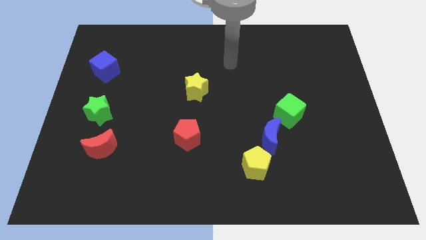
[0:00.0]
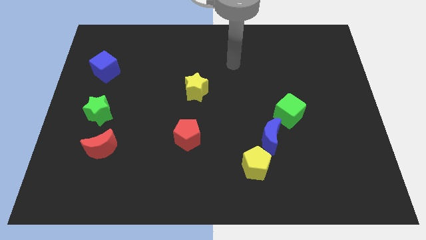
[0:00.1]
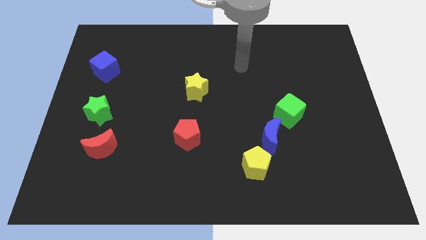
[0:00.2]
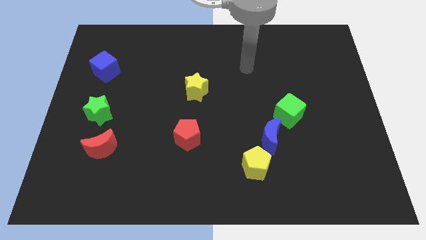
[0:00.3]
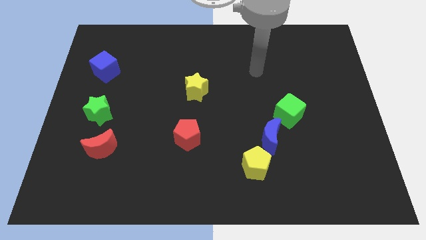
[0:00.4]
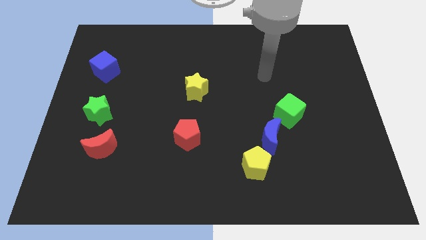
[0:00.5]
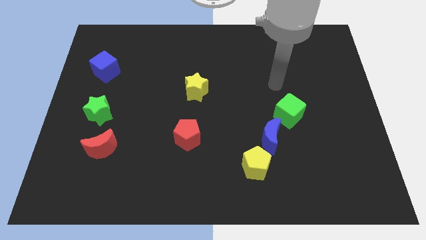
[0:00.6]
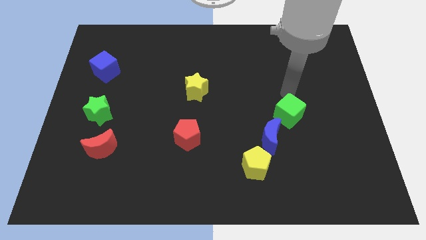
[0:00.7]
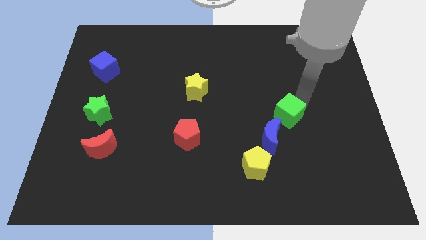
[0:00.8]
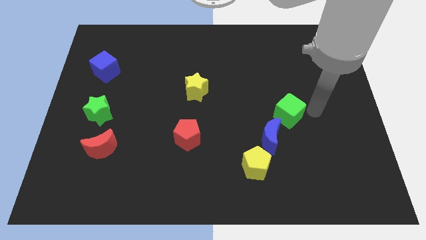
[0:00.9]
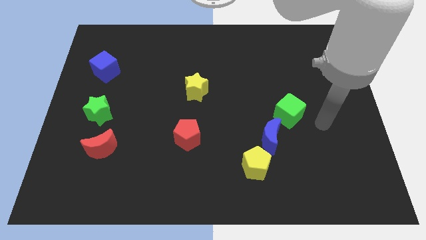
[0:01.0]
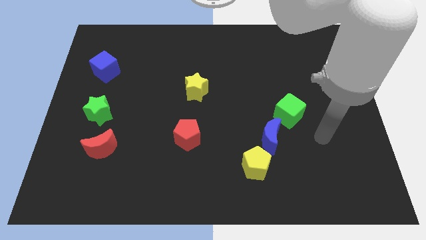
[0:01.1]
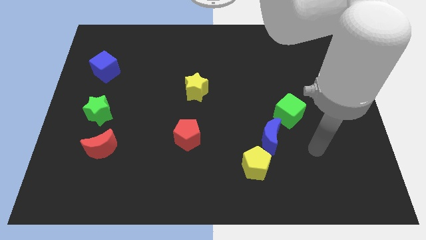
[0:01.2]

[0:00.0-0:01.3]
put your arm towards the left side of the board

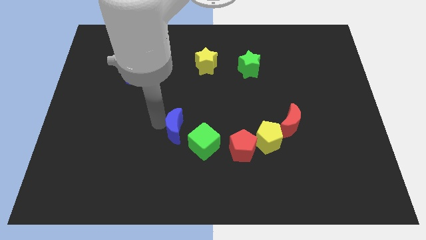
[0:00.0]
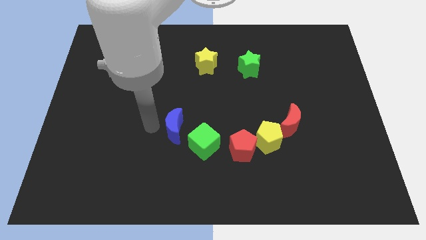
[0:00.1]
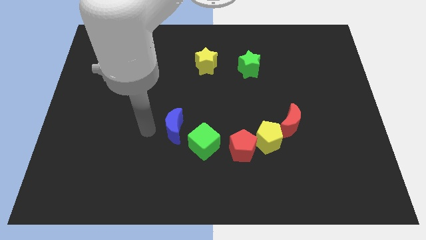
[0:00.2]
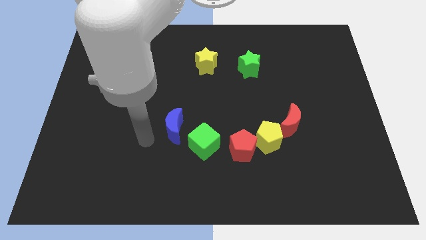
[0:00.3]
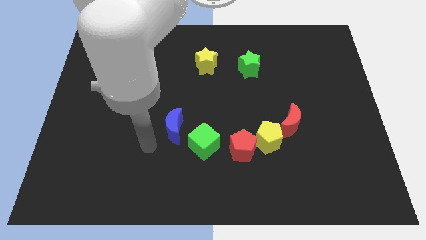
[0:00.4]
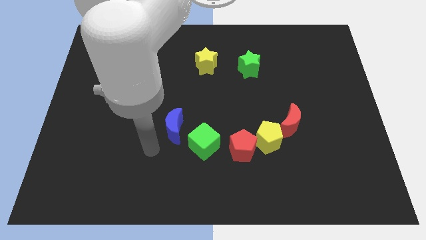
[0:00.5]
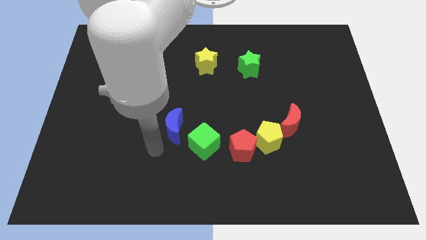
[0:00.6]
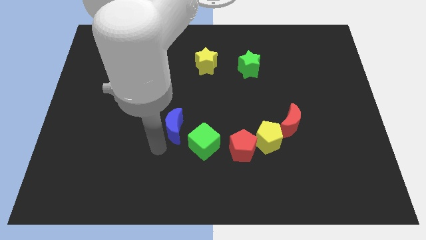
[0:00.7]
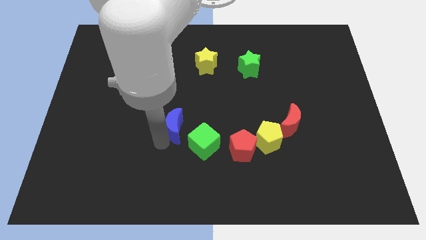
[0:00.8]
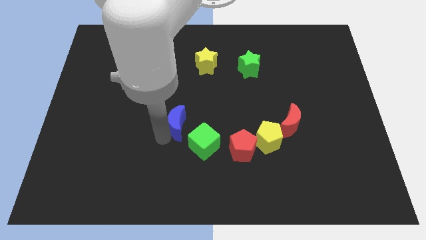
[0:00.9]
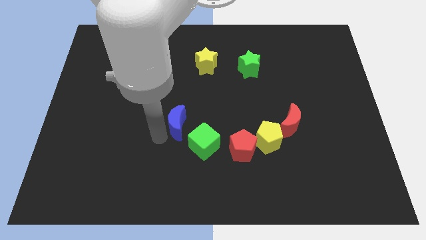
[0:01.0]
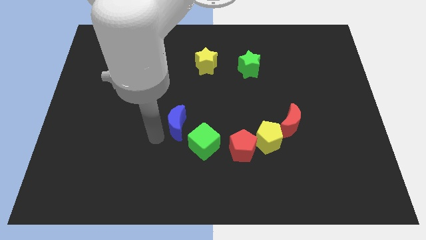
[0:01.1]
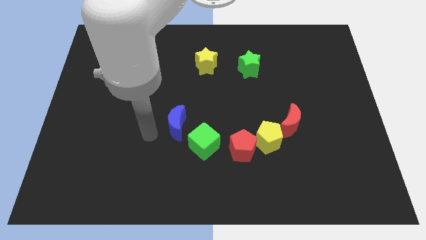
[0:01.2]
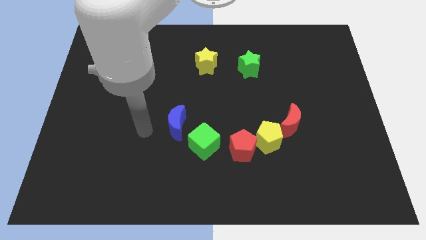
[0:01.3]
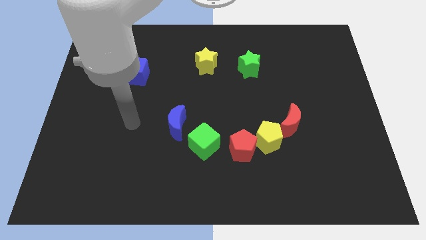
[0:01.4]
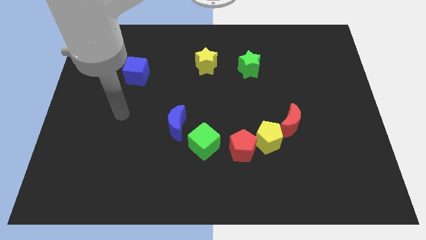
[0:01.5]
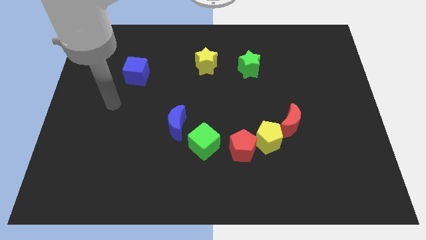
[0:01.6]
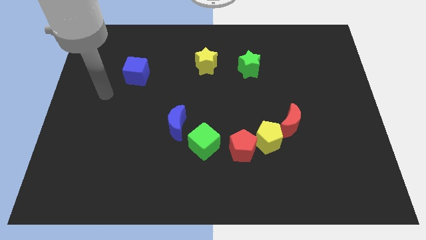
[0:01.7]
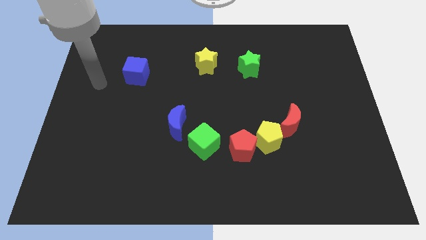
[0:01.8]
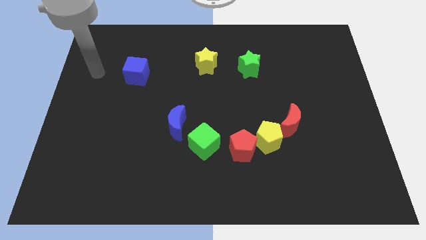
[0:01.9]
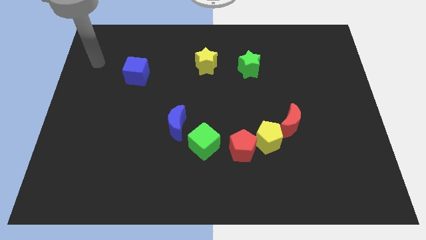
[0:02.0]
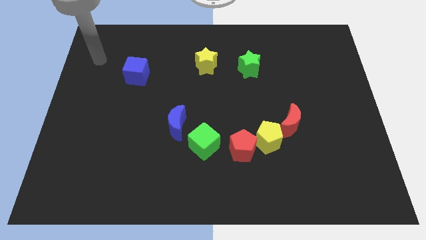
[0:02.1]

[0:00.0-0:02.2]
slide the blue moon slightly up

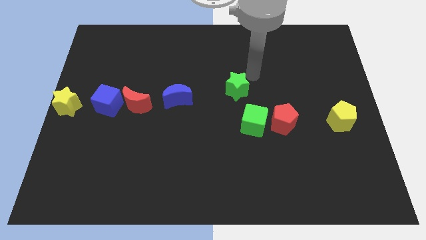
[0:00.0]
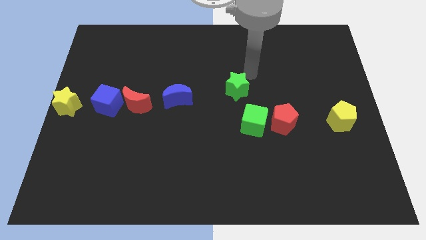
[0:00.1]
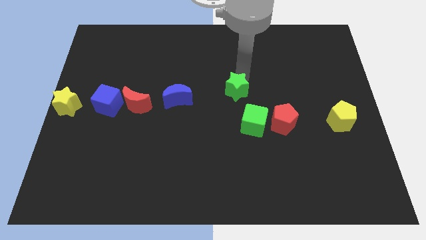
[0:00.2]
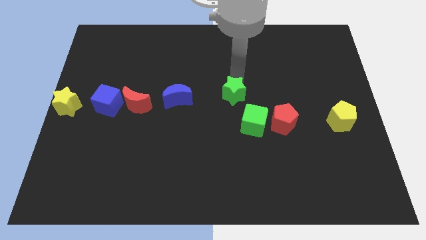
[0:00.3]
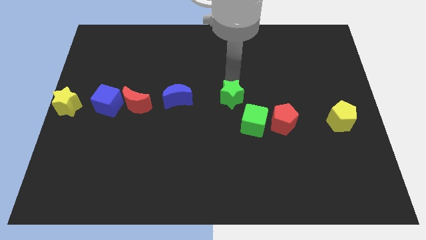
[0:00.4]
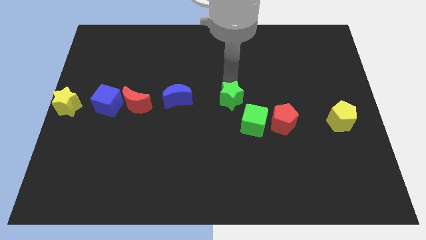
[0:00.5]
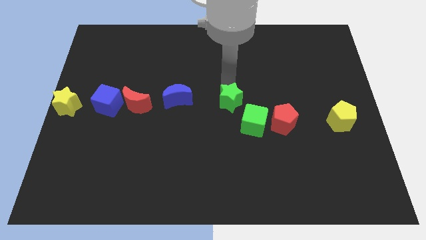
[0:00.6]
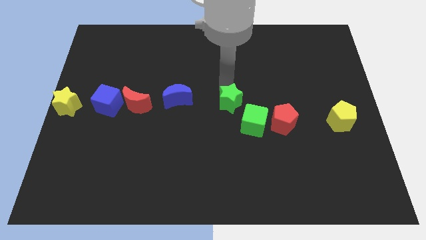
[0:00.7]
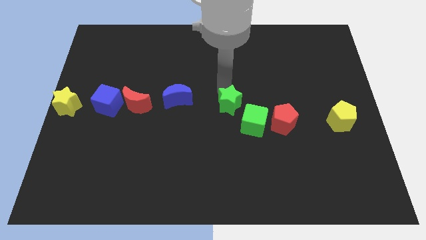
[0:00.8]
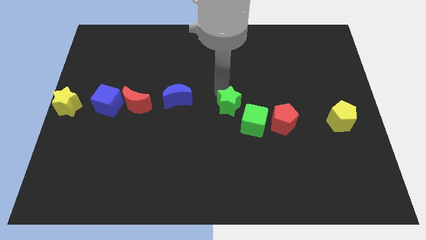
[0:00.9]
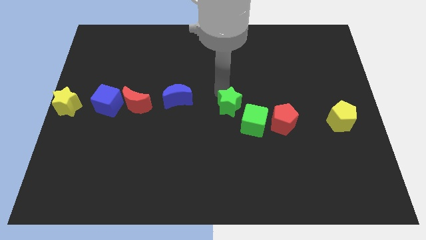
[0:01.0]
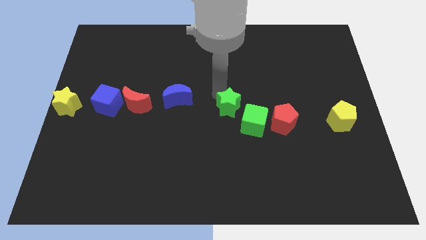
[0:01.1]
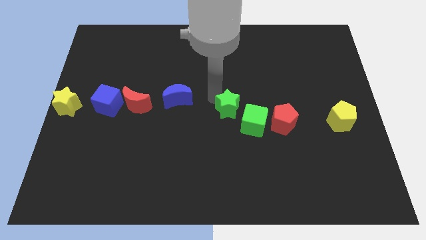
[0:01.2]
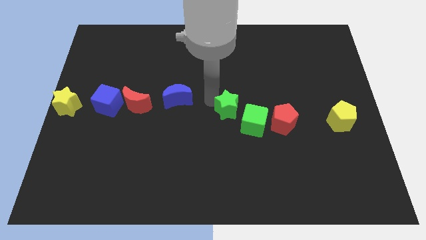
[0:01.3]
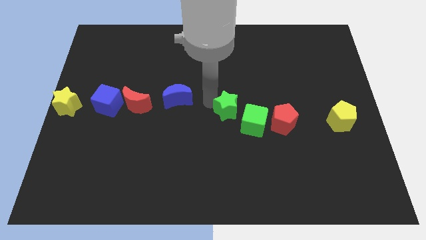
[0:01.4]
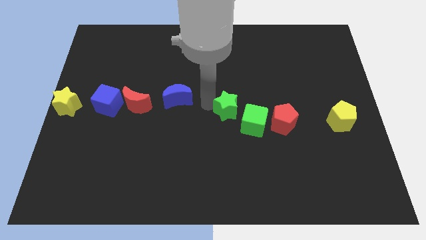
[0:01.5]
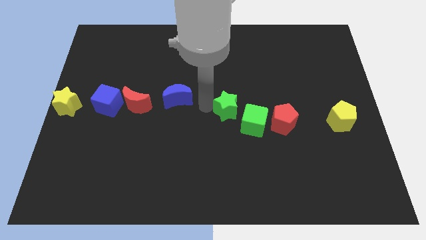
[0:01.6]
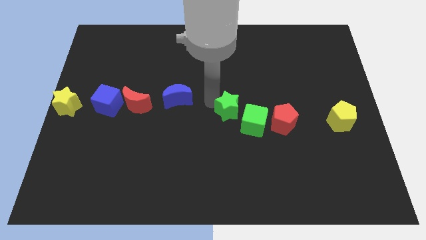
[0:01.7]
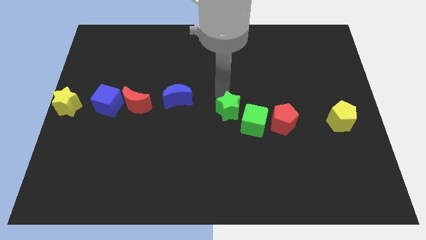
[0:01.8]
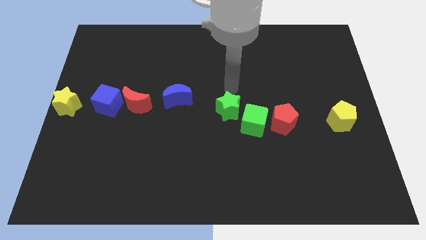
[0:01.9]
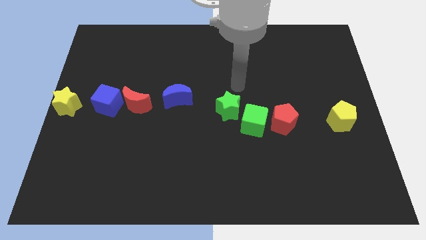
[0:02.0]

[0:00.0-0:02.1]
push the green star towards the bottom side of the board

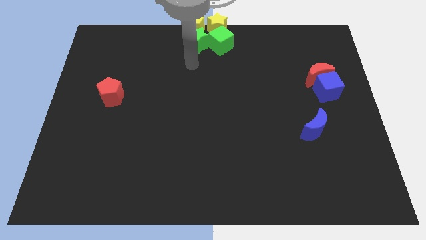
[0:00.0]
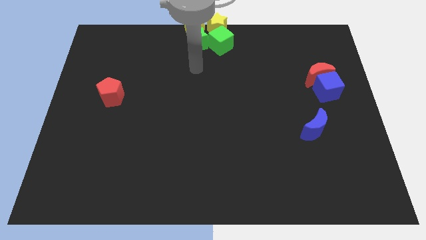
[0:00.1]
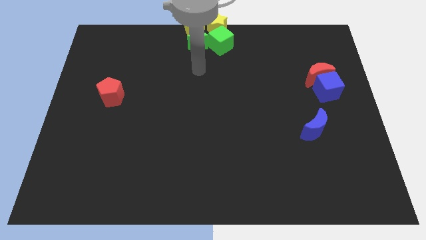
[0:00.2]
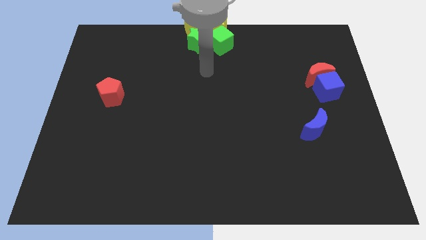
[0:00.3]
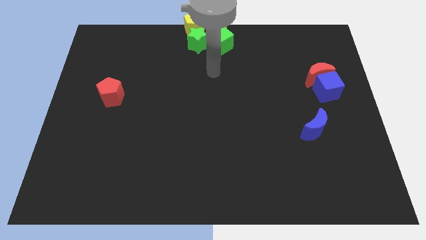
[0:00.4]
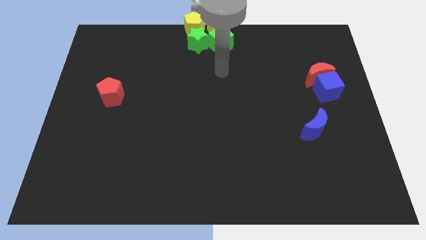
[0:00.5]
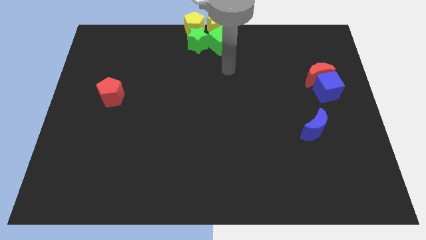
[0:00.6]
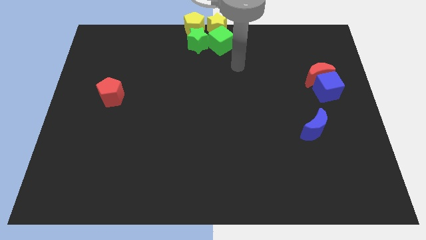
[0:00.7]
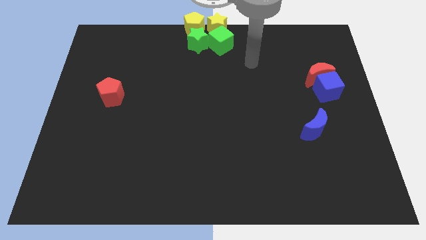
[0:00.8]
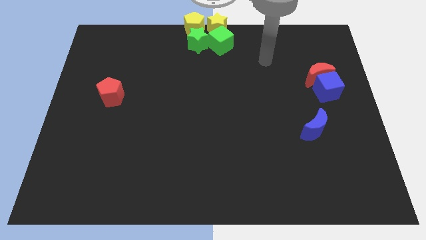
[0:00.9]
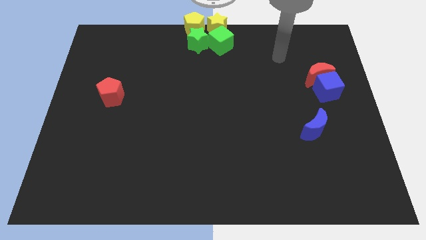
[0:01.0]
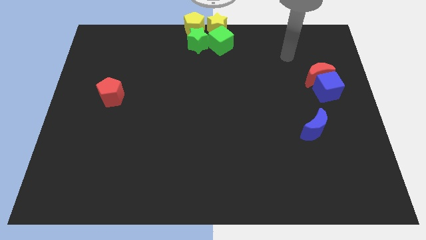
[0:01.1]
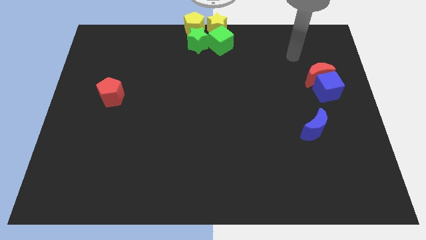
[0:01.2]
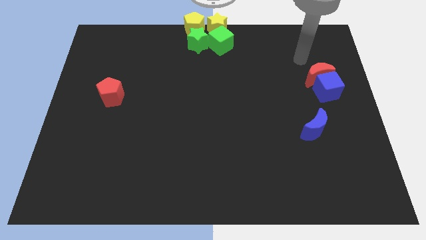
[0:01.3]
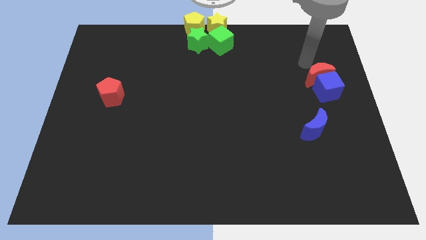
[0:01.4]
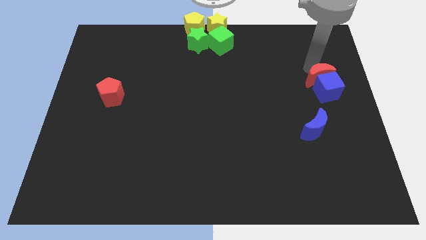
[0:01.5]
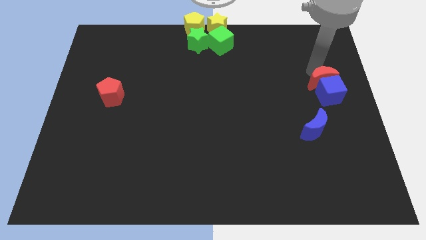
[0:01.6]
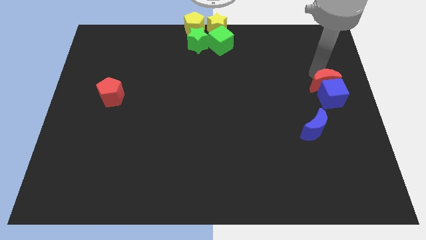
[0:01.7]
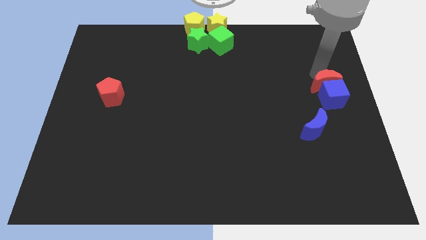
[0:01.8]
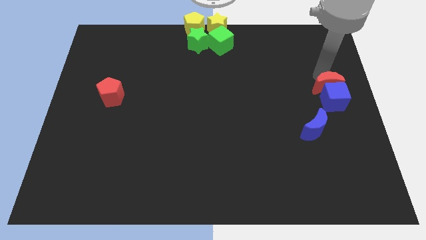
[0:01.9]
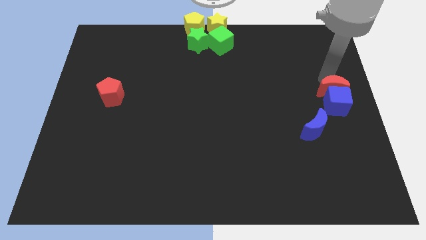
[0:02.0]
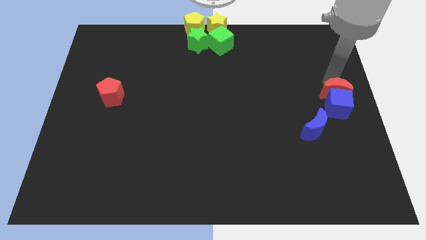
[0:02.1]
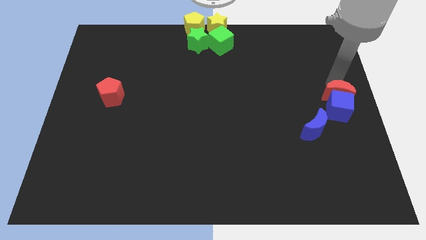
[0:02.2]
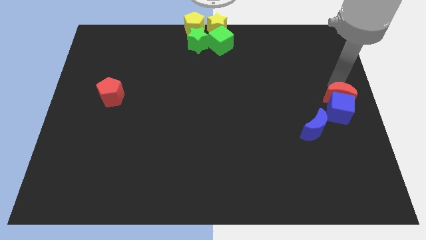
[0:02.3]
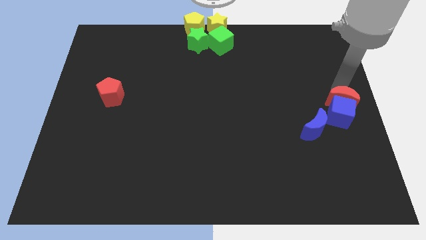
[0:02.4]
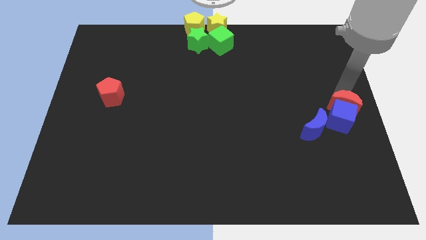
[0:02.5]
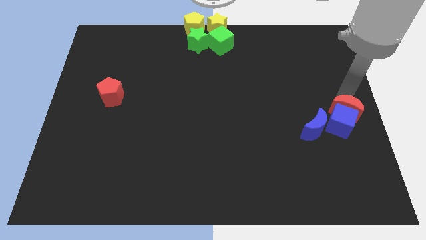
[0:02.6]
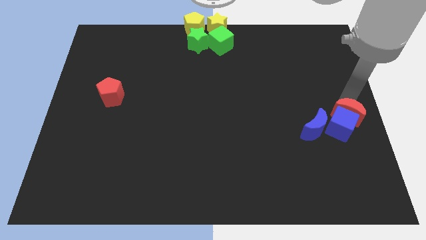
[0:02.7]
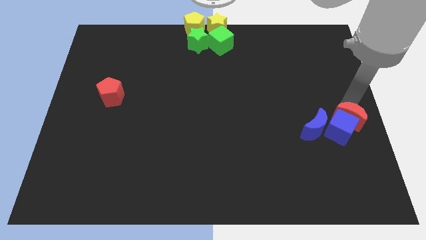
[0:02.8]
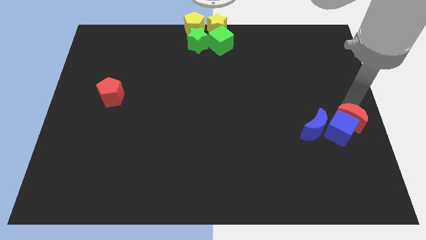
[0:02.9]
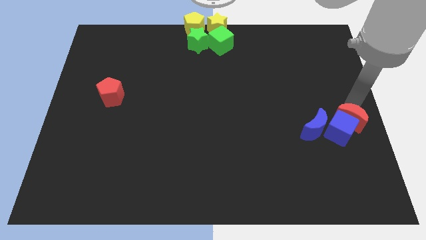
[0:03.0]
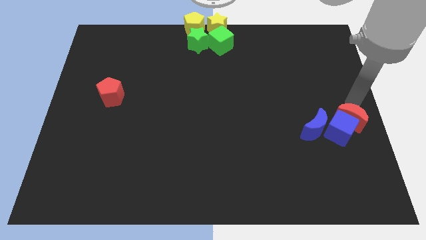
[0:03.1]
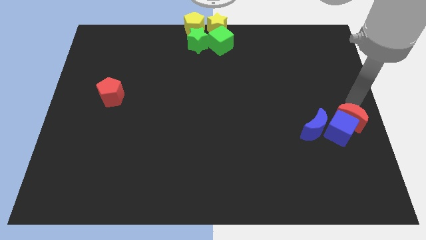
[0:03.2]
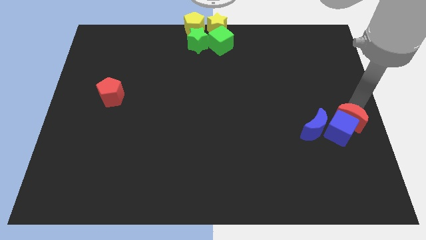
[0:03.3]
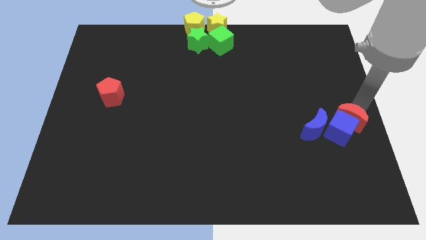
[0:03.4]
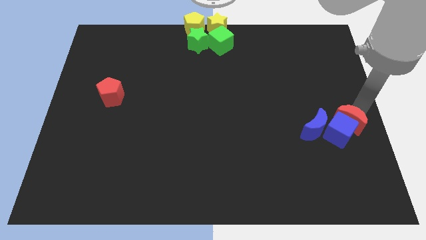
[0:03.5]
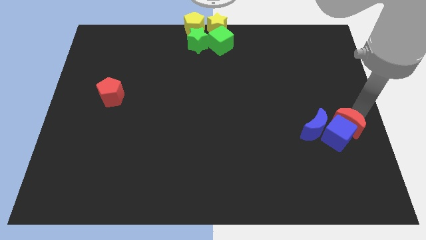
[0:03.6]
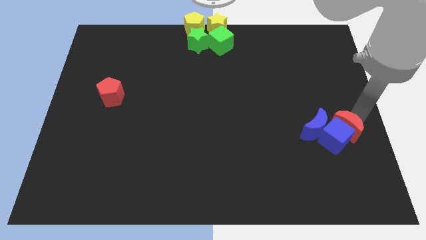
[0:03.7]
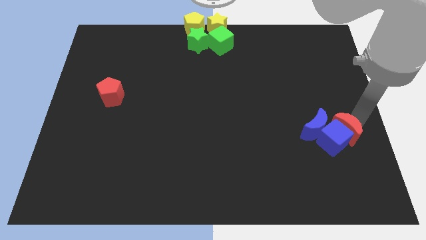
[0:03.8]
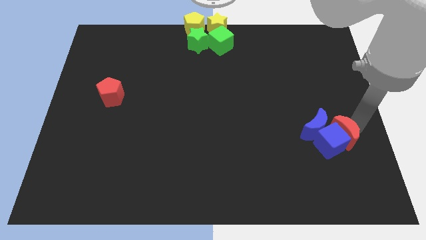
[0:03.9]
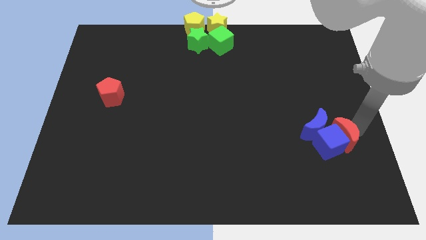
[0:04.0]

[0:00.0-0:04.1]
place the red crescent and blue cube to the bottom of the blue crescent
